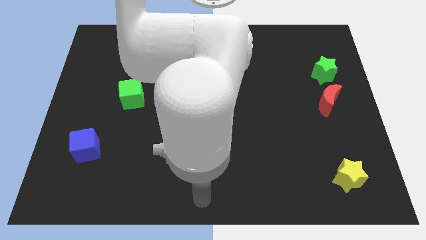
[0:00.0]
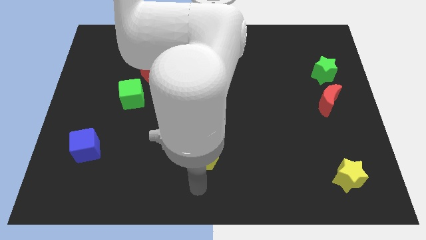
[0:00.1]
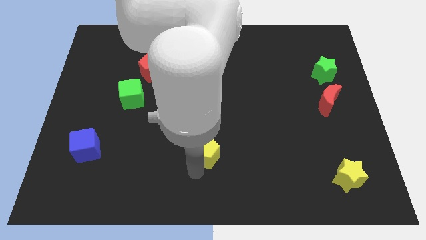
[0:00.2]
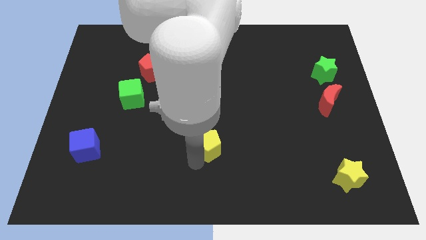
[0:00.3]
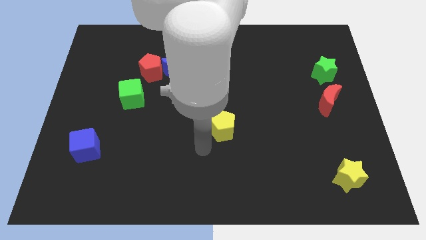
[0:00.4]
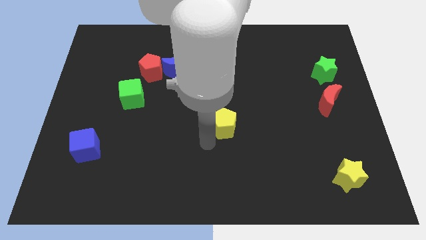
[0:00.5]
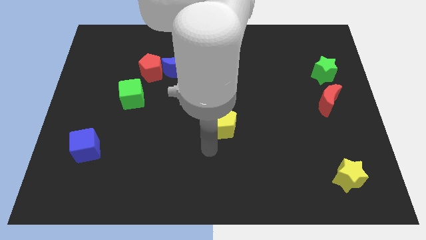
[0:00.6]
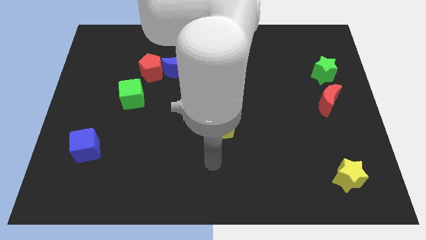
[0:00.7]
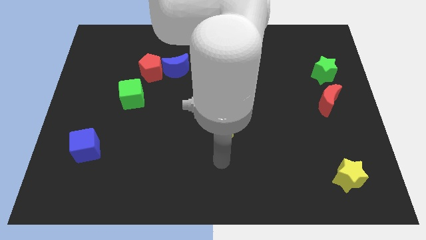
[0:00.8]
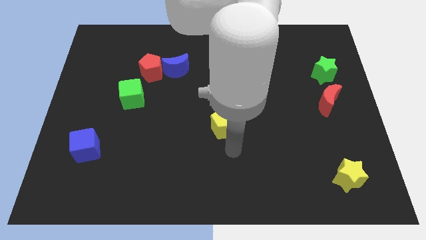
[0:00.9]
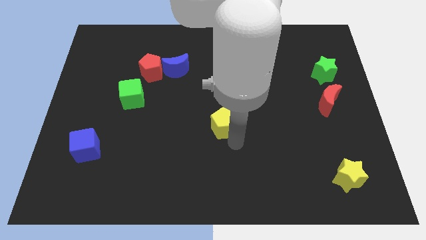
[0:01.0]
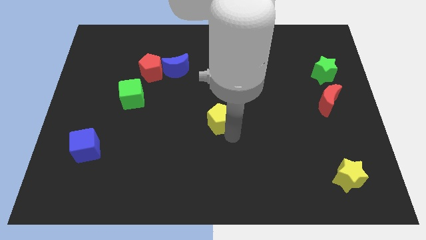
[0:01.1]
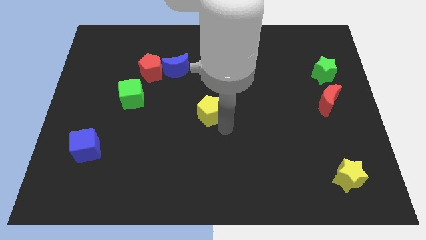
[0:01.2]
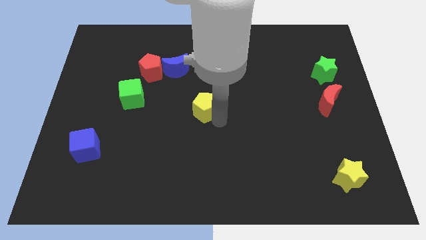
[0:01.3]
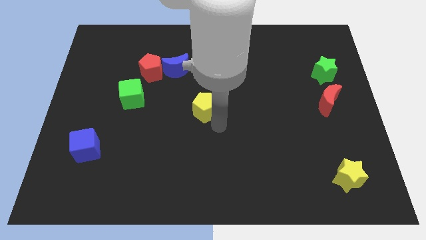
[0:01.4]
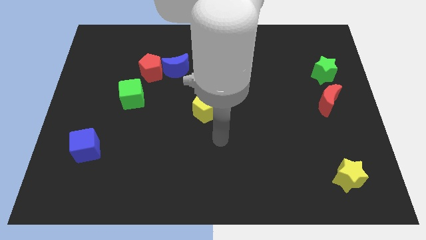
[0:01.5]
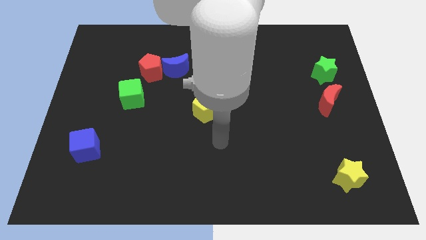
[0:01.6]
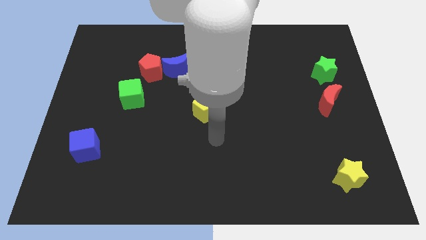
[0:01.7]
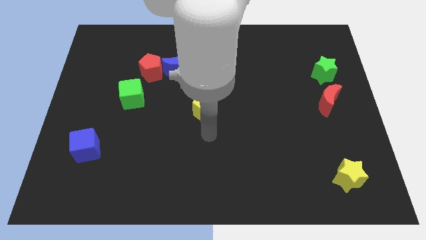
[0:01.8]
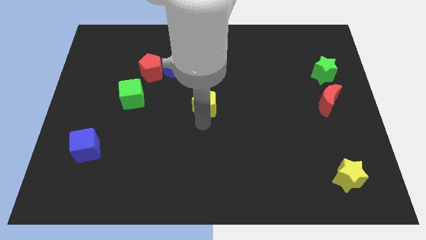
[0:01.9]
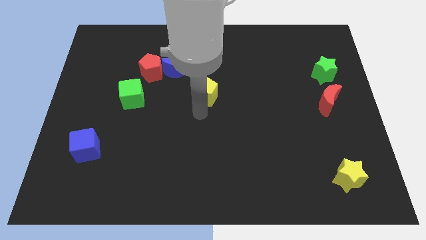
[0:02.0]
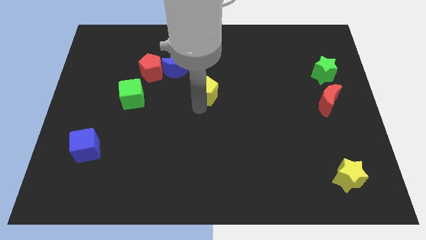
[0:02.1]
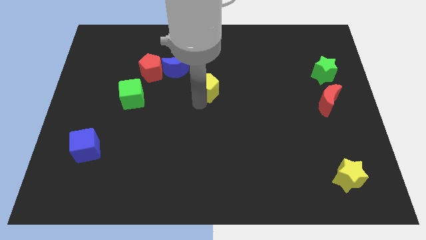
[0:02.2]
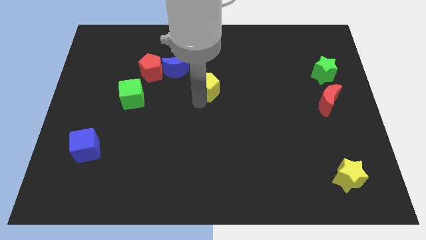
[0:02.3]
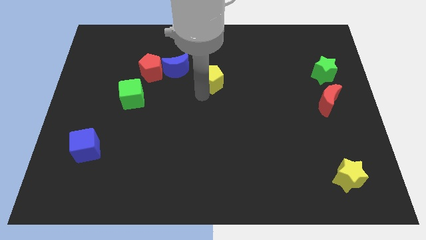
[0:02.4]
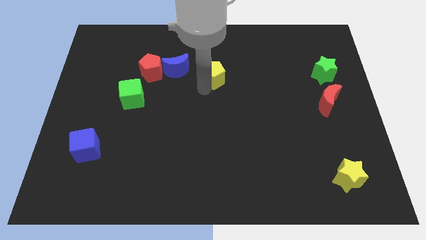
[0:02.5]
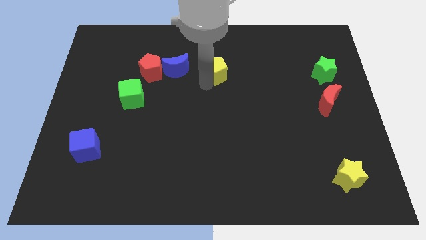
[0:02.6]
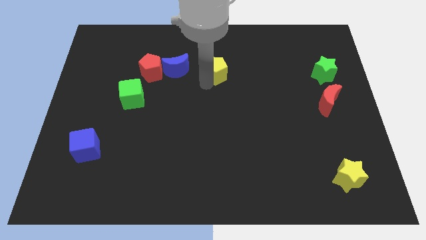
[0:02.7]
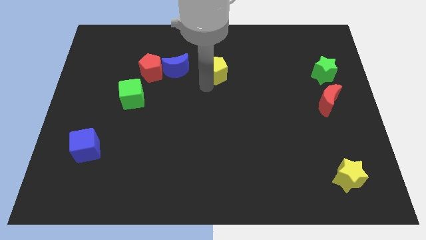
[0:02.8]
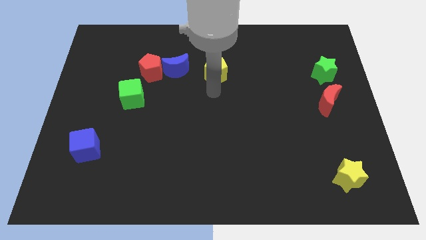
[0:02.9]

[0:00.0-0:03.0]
place yellow pentagon beside blue crescent

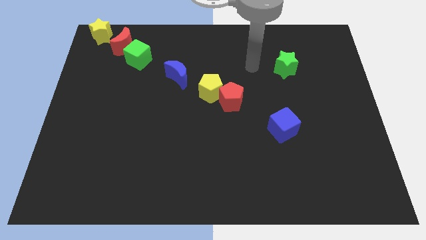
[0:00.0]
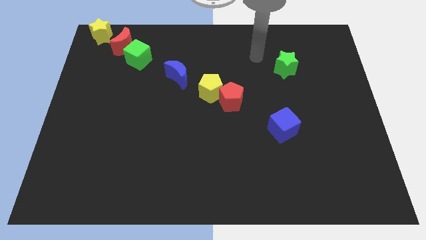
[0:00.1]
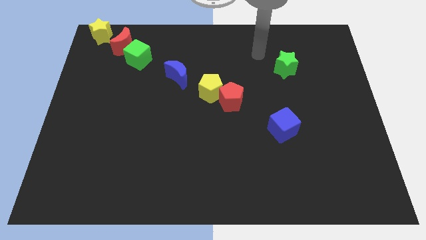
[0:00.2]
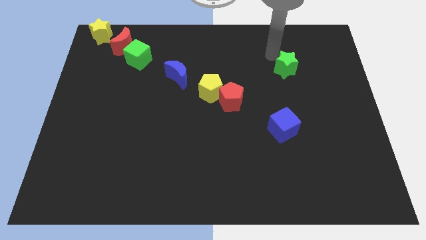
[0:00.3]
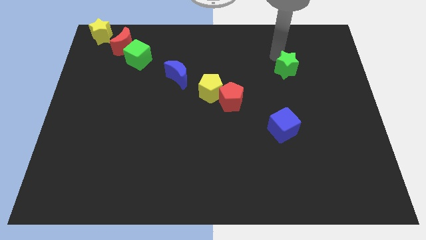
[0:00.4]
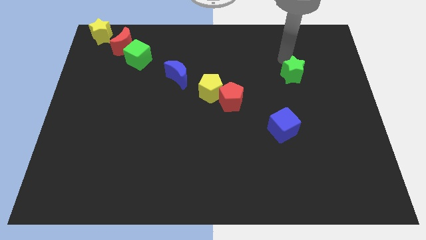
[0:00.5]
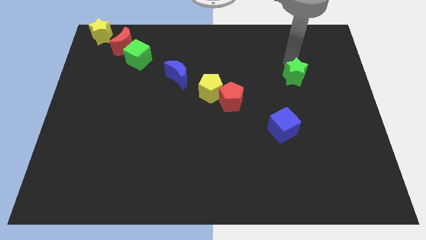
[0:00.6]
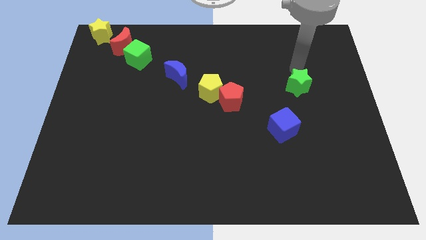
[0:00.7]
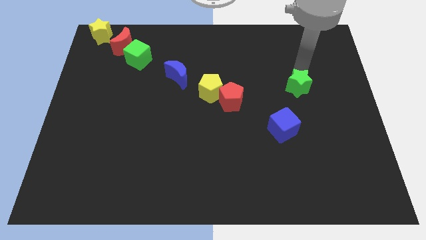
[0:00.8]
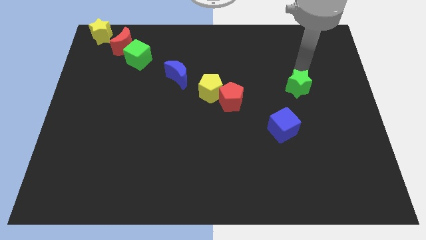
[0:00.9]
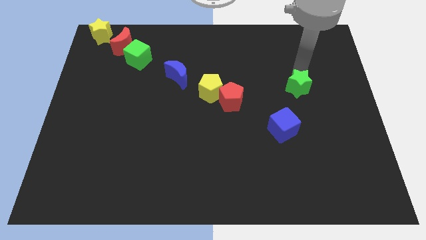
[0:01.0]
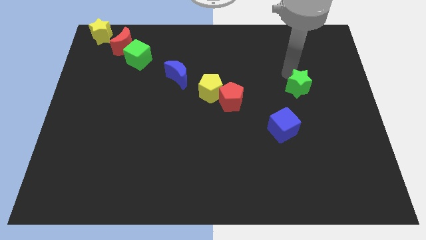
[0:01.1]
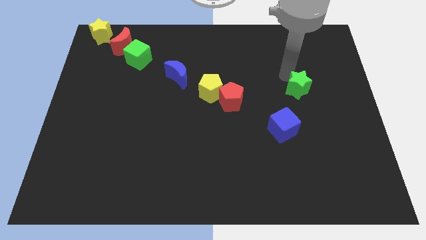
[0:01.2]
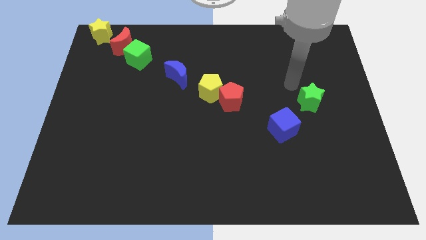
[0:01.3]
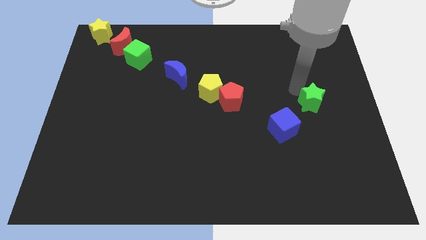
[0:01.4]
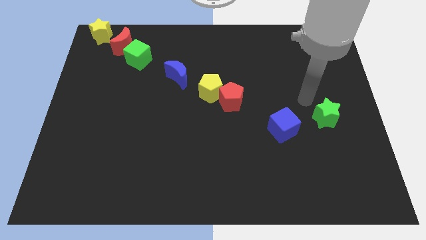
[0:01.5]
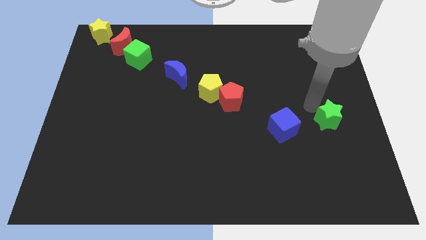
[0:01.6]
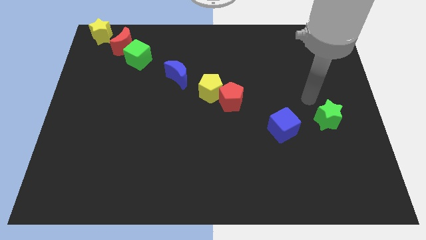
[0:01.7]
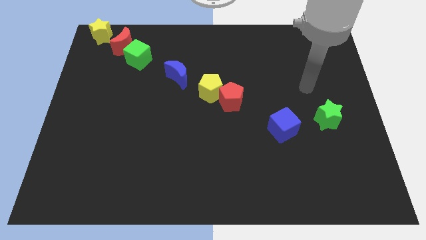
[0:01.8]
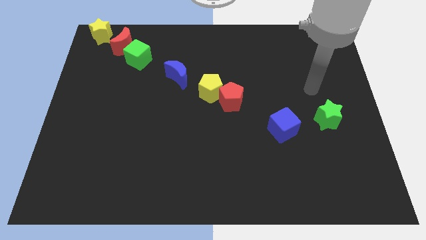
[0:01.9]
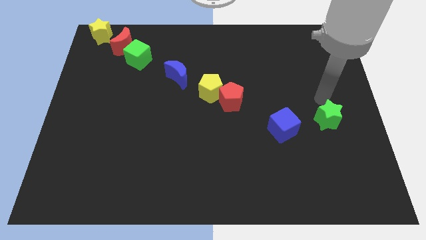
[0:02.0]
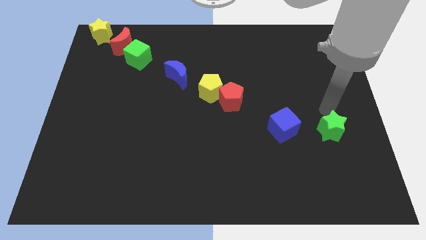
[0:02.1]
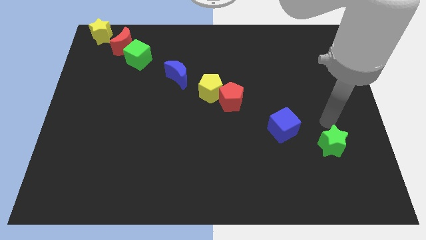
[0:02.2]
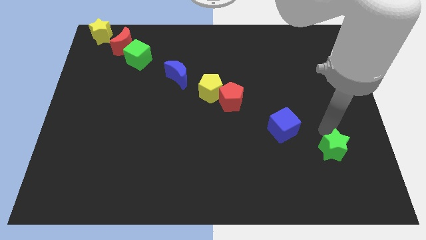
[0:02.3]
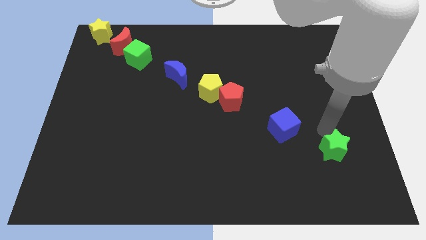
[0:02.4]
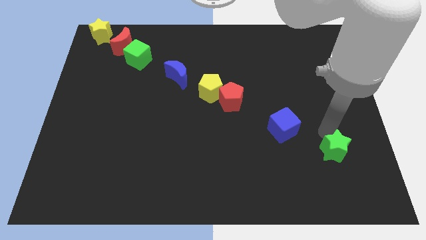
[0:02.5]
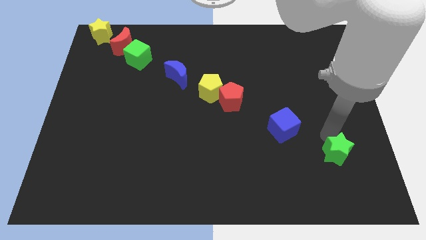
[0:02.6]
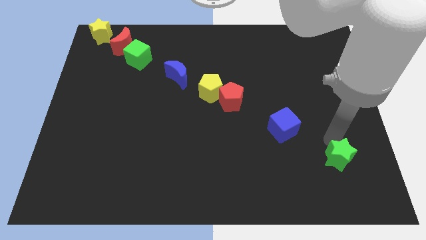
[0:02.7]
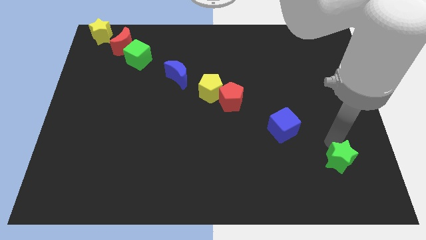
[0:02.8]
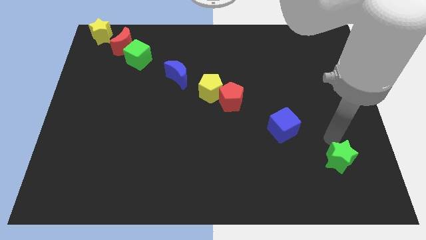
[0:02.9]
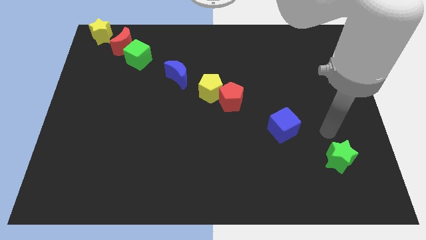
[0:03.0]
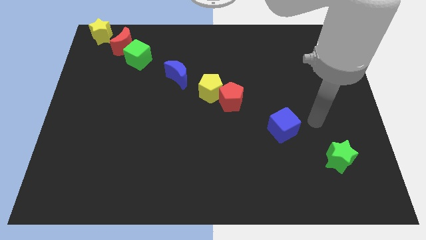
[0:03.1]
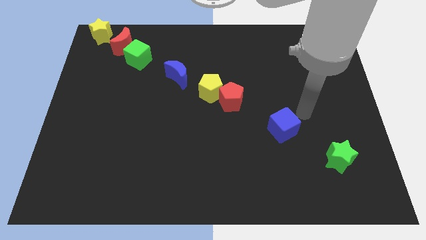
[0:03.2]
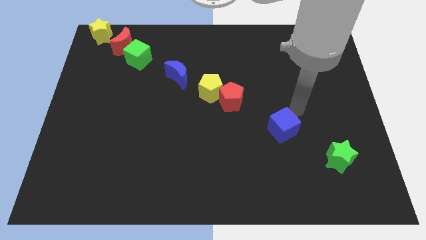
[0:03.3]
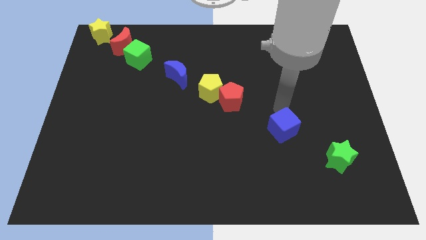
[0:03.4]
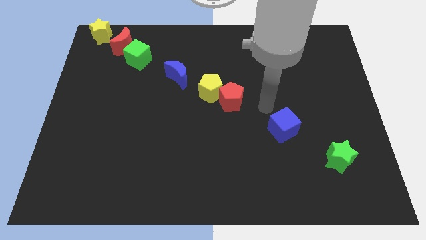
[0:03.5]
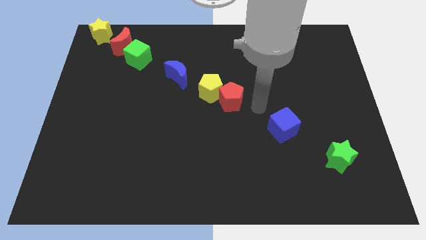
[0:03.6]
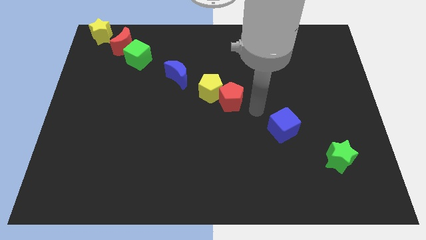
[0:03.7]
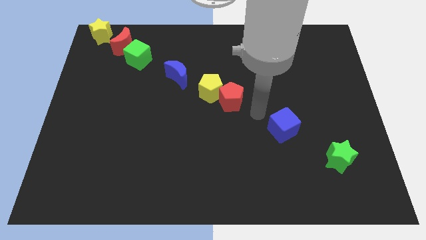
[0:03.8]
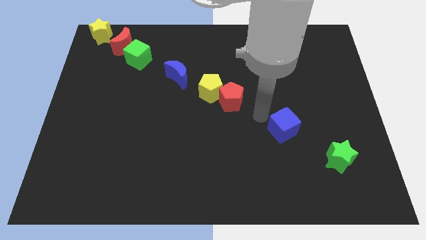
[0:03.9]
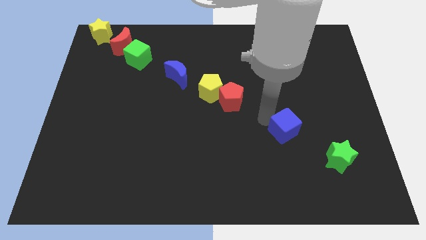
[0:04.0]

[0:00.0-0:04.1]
place the green star diagnol to the blue cube

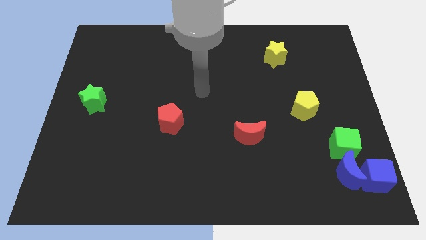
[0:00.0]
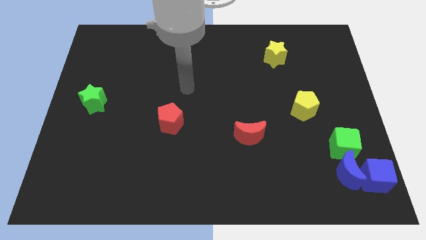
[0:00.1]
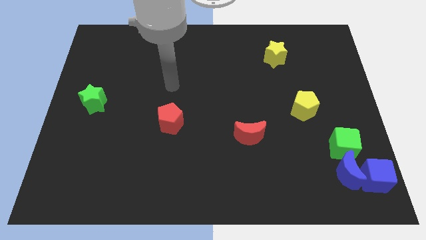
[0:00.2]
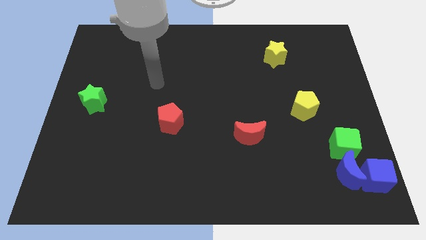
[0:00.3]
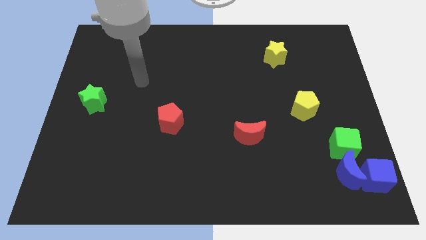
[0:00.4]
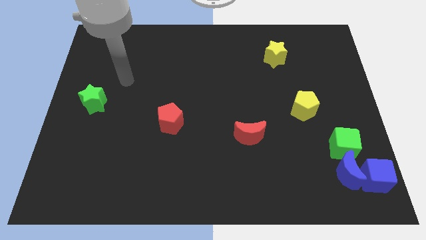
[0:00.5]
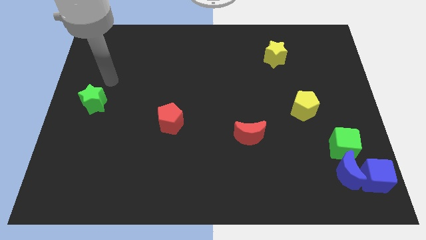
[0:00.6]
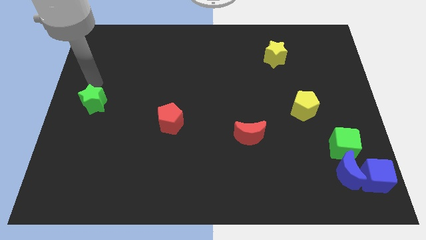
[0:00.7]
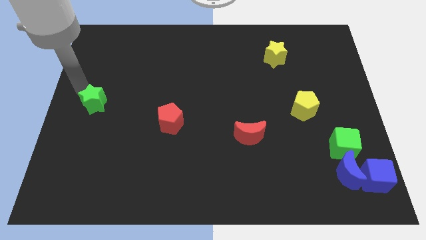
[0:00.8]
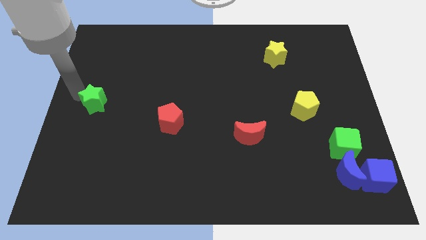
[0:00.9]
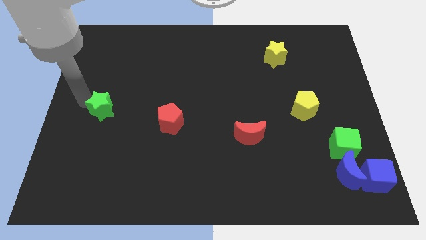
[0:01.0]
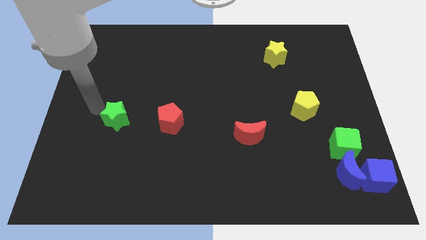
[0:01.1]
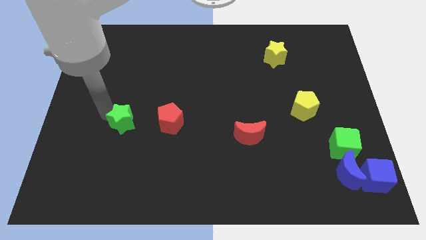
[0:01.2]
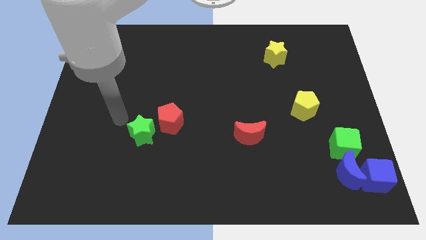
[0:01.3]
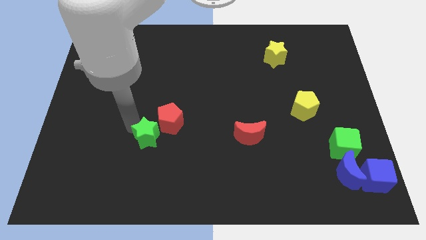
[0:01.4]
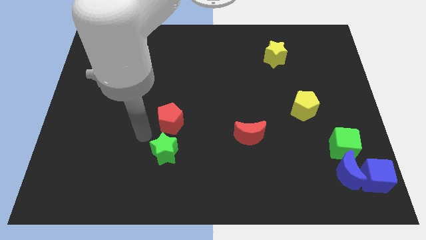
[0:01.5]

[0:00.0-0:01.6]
move the green star below the red pentagon

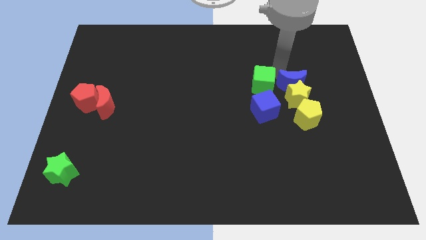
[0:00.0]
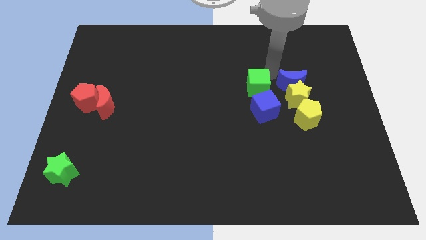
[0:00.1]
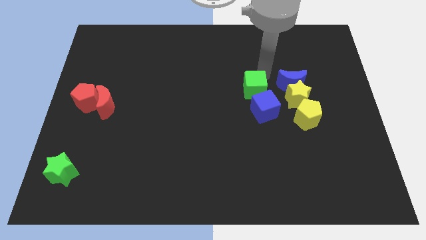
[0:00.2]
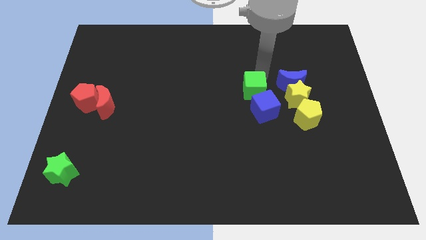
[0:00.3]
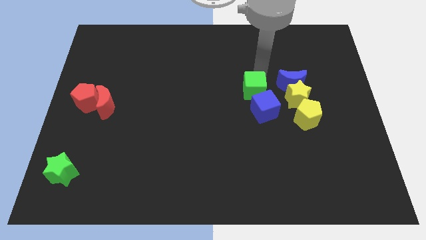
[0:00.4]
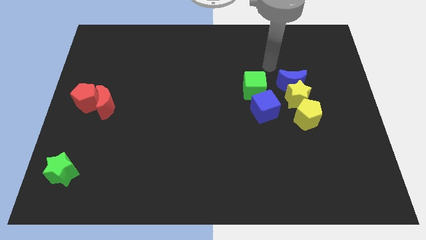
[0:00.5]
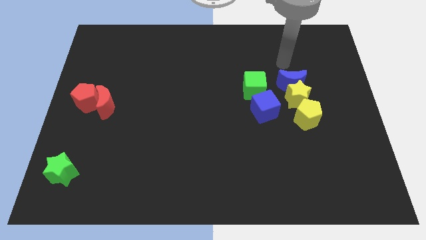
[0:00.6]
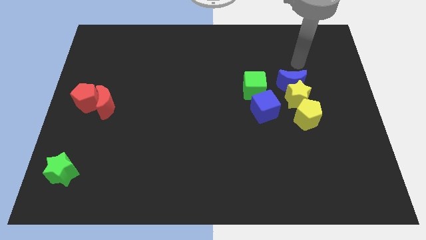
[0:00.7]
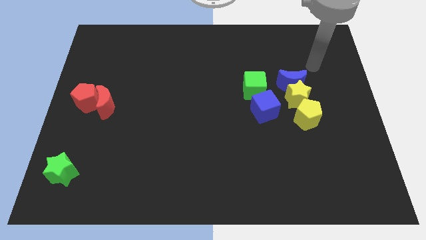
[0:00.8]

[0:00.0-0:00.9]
move the green cube slightly to the above of blue cube
